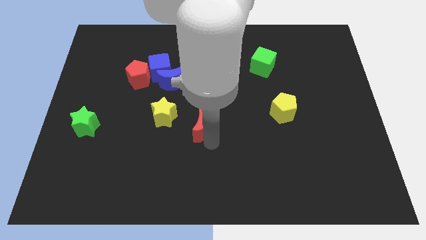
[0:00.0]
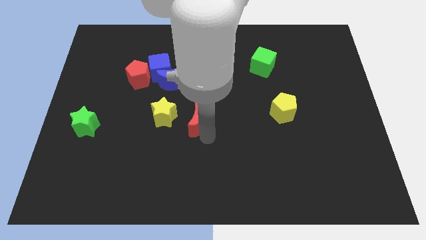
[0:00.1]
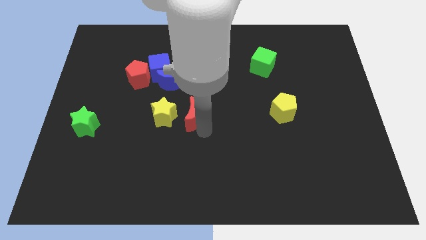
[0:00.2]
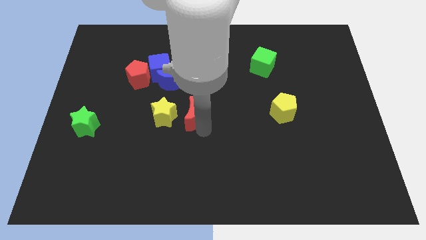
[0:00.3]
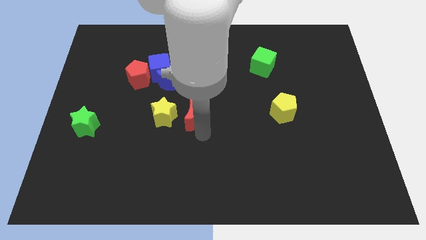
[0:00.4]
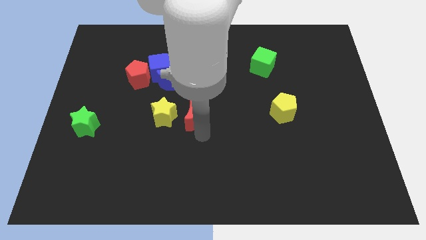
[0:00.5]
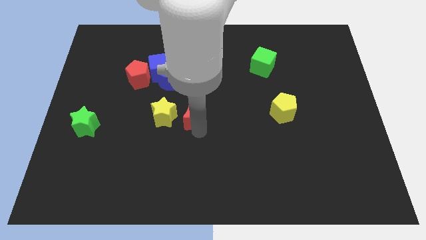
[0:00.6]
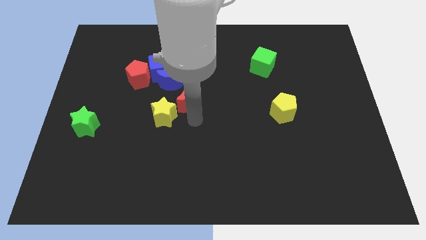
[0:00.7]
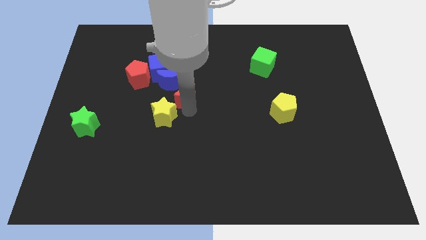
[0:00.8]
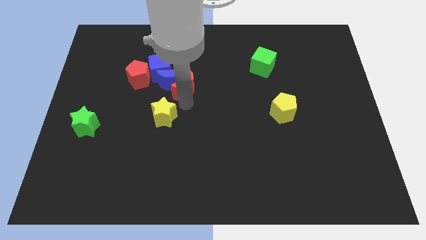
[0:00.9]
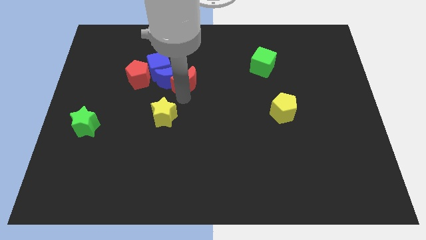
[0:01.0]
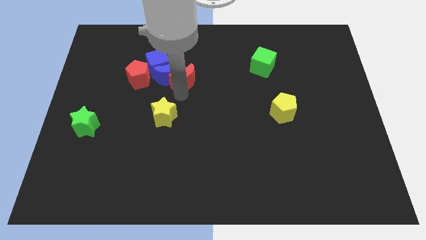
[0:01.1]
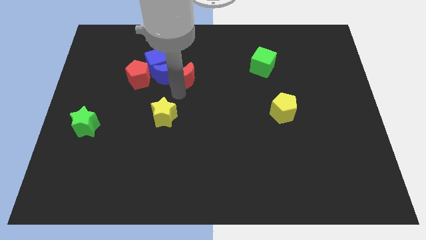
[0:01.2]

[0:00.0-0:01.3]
push the red crescent into the blue crescent

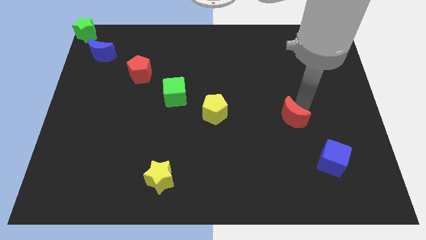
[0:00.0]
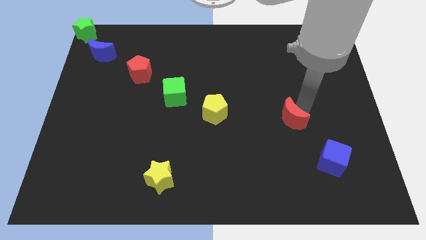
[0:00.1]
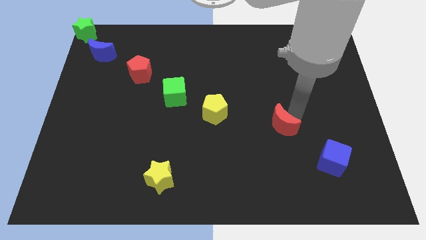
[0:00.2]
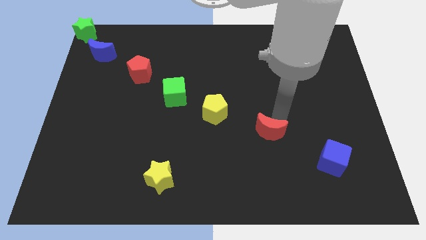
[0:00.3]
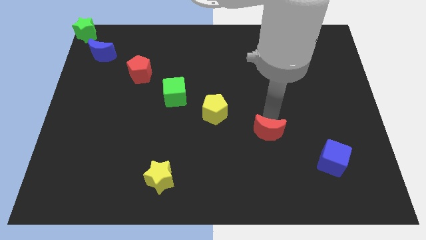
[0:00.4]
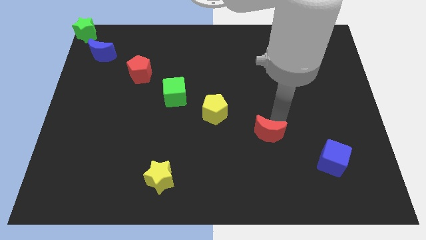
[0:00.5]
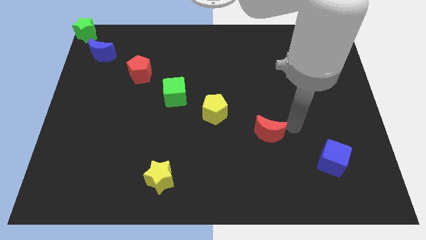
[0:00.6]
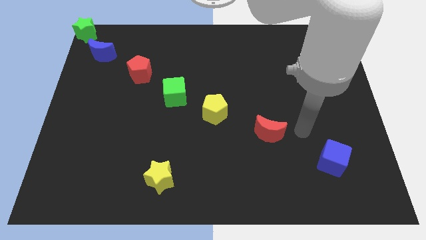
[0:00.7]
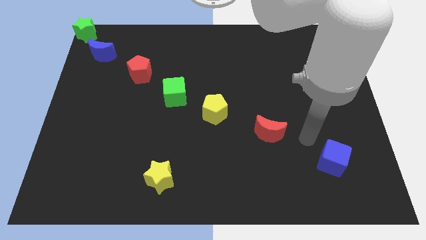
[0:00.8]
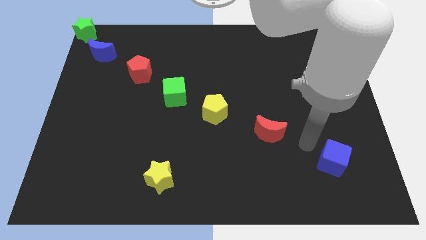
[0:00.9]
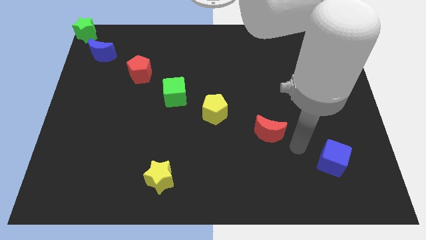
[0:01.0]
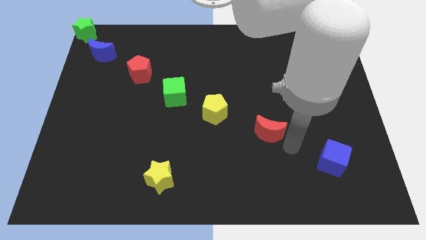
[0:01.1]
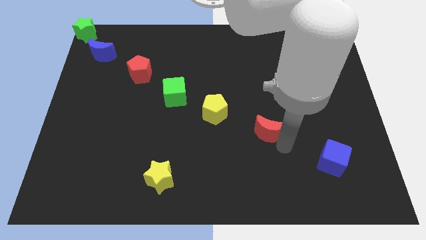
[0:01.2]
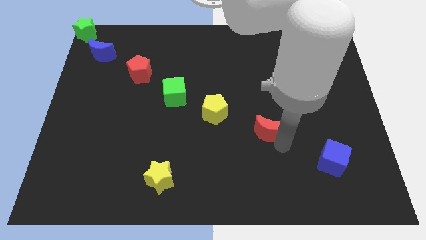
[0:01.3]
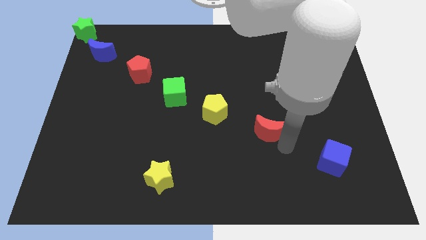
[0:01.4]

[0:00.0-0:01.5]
put the red crescent in between yellow pentagon and blue cube

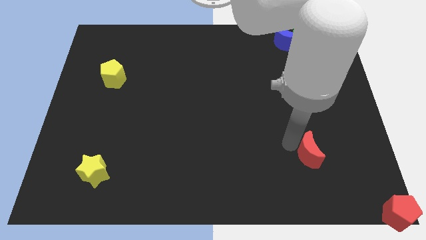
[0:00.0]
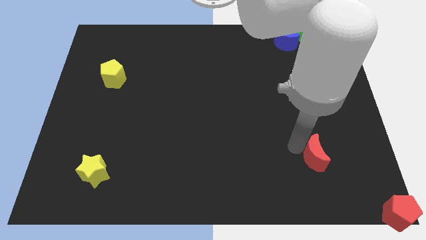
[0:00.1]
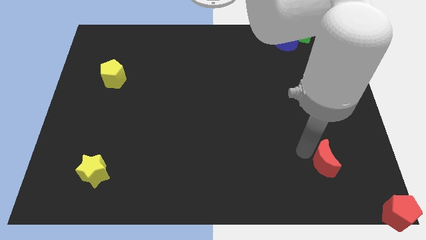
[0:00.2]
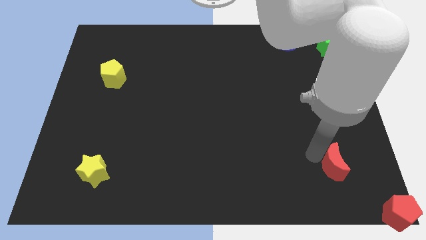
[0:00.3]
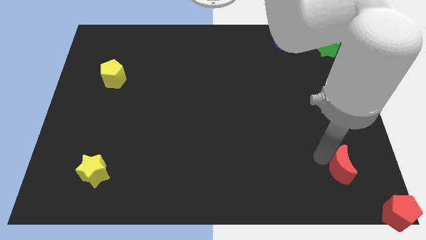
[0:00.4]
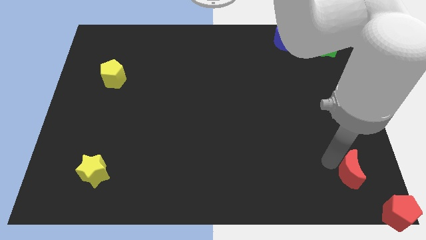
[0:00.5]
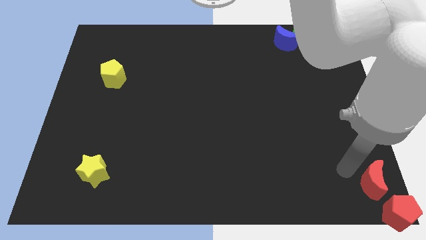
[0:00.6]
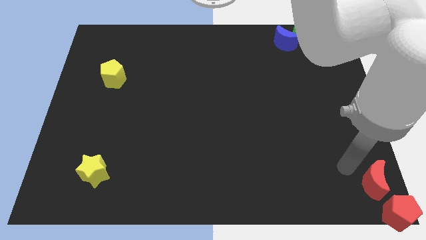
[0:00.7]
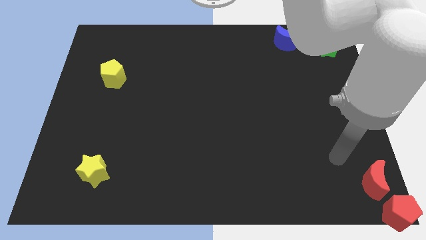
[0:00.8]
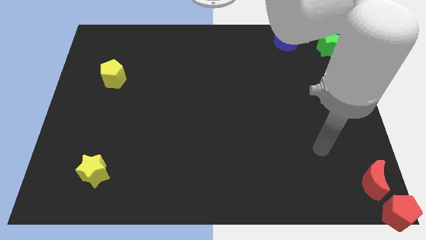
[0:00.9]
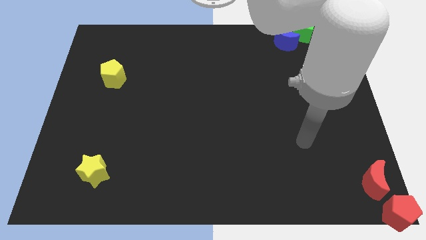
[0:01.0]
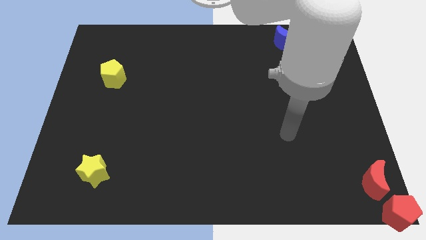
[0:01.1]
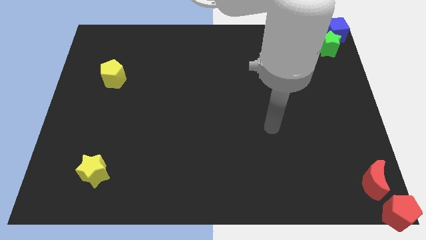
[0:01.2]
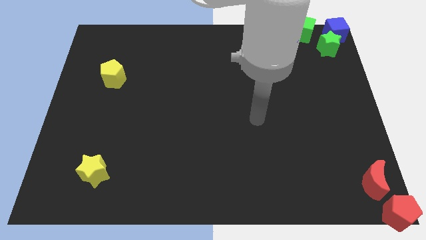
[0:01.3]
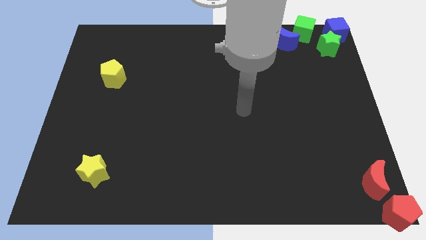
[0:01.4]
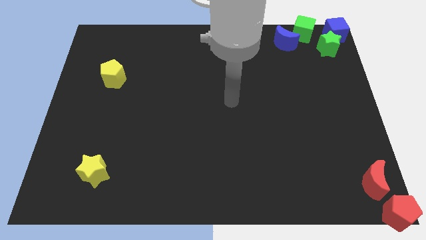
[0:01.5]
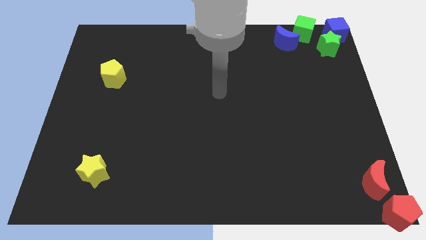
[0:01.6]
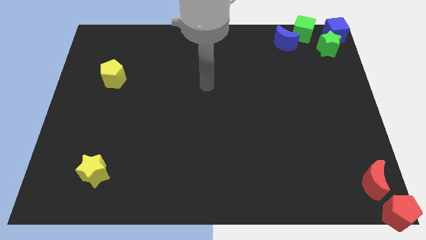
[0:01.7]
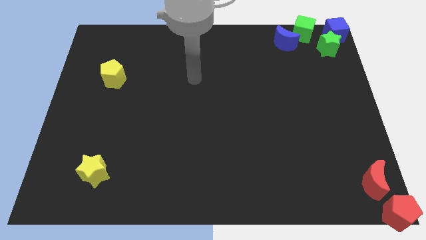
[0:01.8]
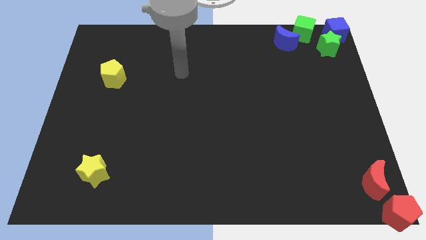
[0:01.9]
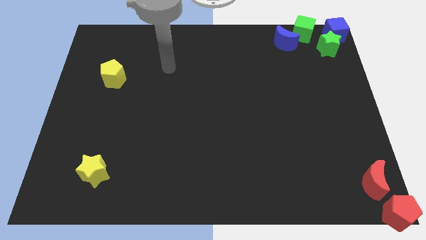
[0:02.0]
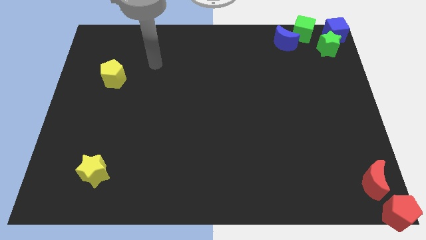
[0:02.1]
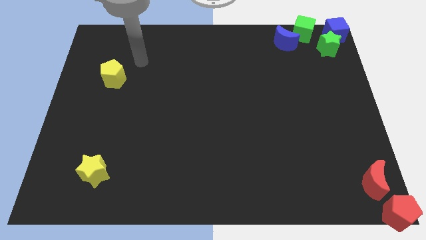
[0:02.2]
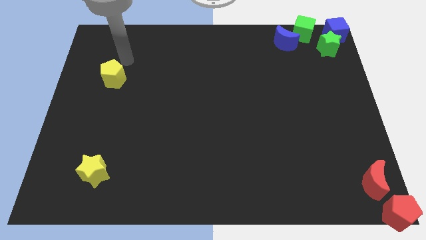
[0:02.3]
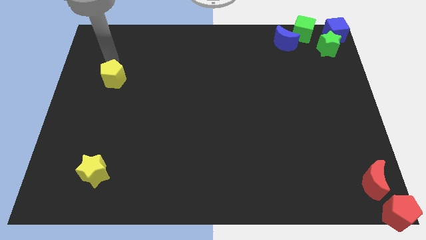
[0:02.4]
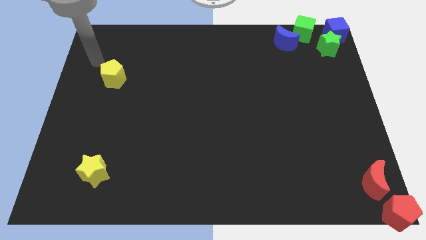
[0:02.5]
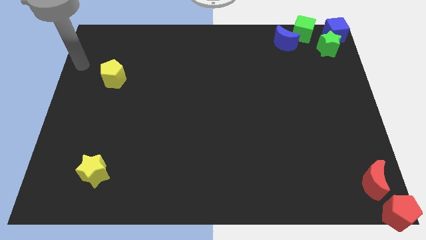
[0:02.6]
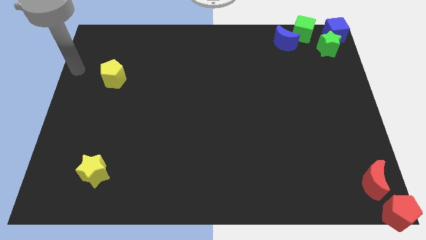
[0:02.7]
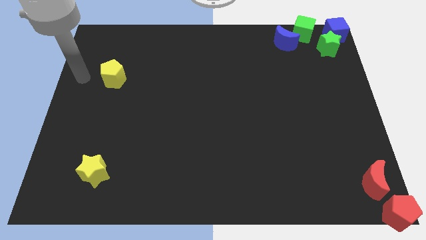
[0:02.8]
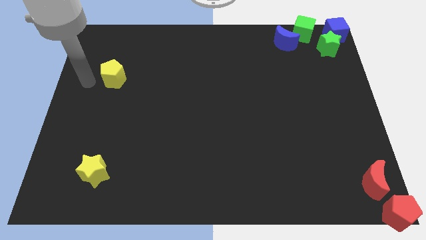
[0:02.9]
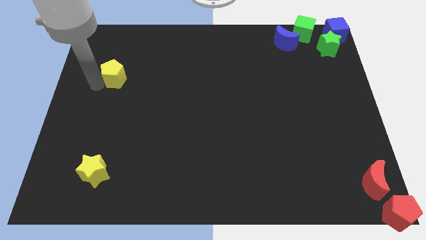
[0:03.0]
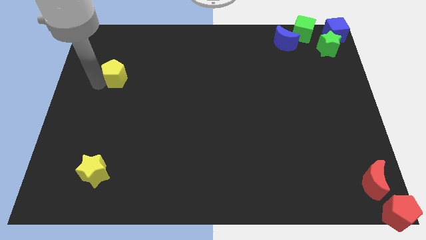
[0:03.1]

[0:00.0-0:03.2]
place the red moon at the top of red pentagon

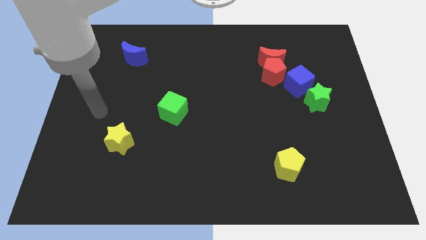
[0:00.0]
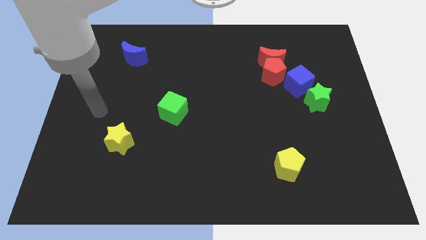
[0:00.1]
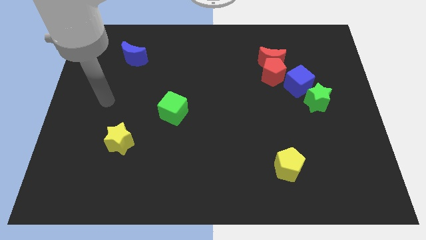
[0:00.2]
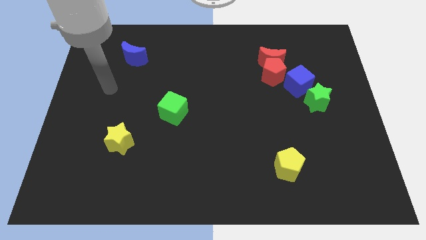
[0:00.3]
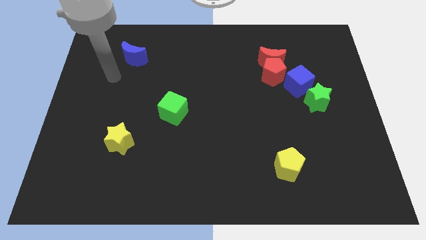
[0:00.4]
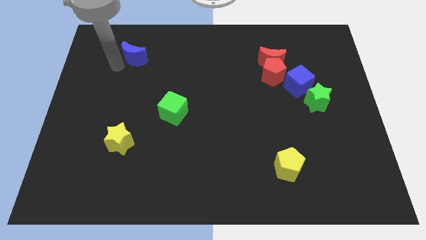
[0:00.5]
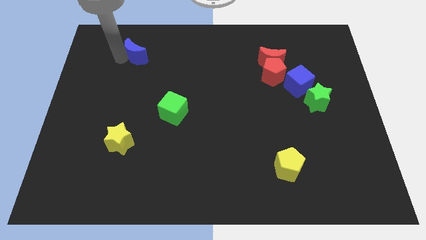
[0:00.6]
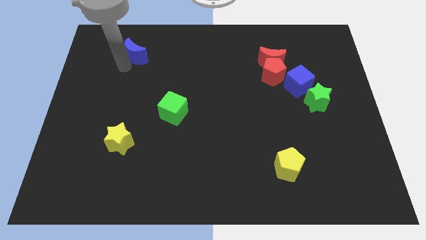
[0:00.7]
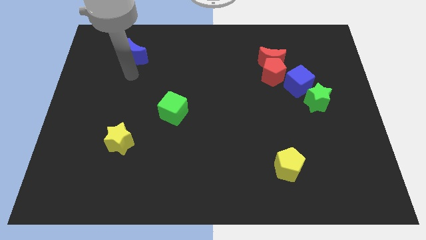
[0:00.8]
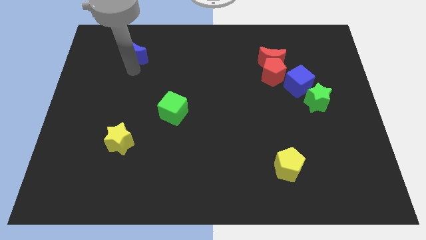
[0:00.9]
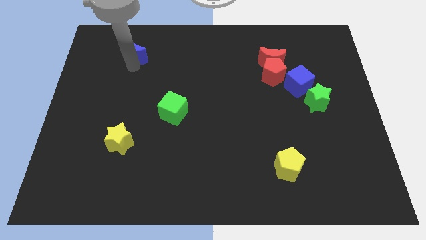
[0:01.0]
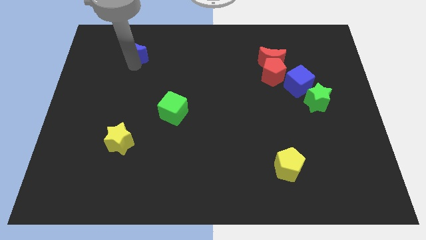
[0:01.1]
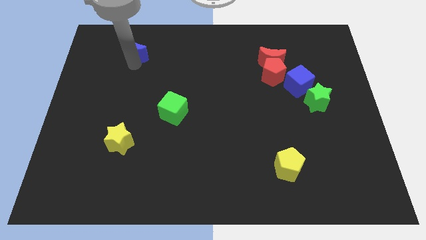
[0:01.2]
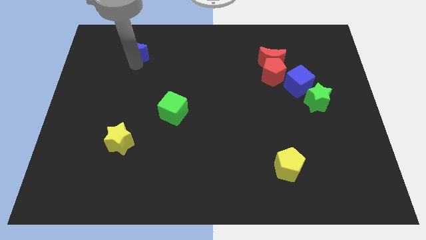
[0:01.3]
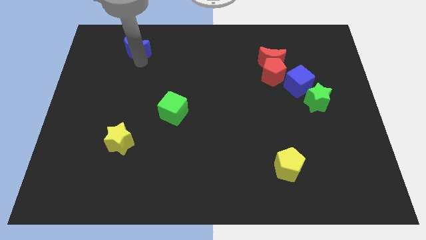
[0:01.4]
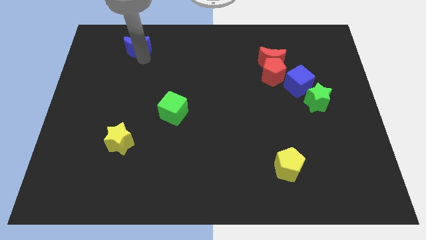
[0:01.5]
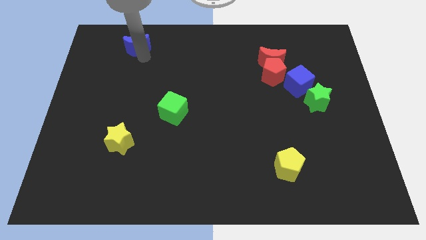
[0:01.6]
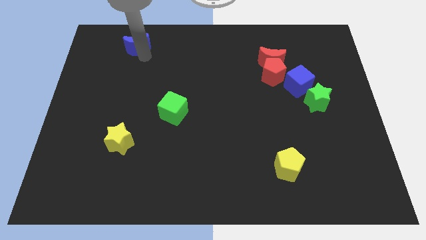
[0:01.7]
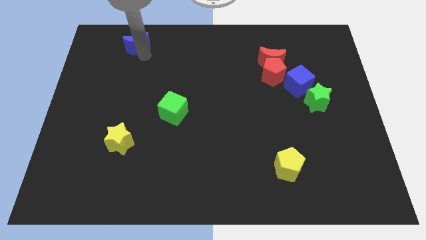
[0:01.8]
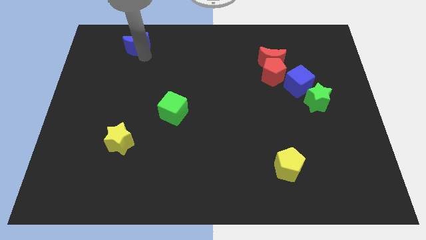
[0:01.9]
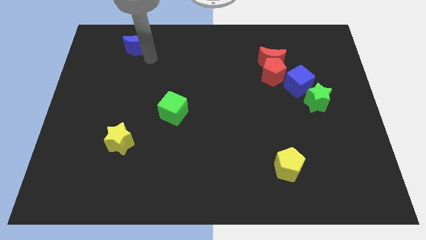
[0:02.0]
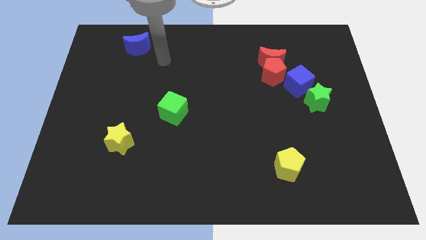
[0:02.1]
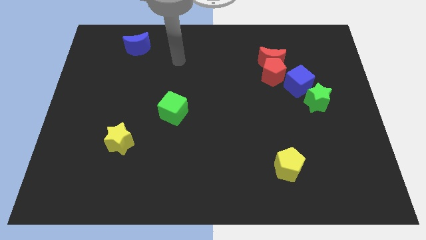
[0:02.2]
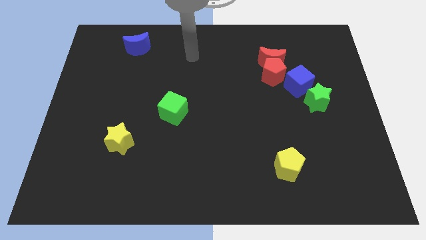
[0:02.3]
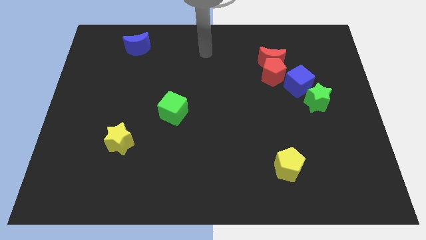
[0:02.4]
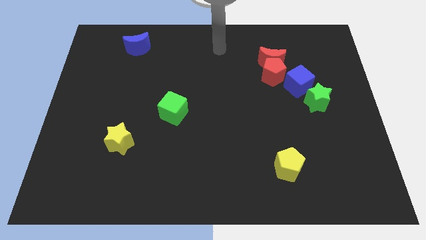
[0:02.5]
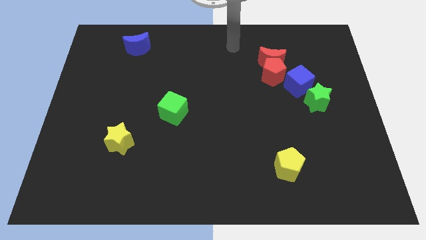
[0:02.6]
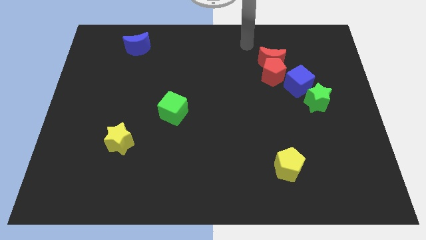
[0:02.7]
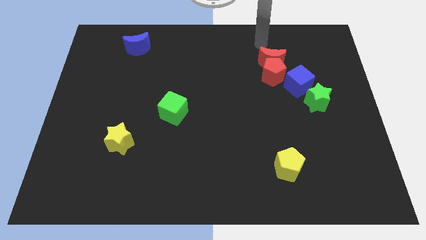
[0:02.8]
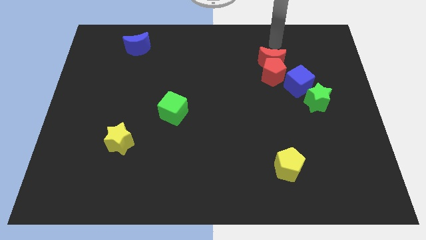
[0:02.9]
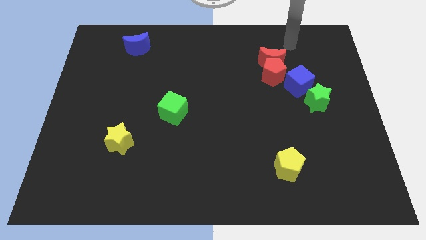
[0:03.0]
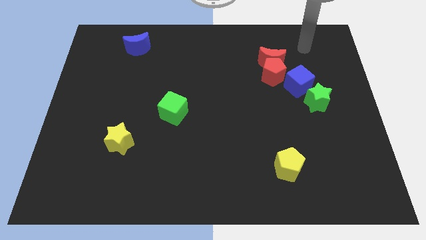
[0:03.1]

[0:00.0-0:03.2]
move your arm towards the red moon
